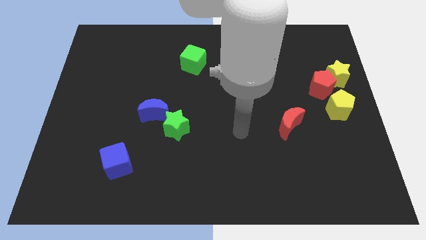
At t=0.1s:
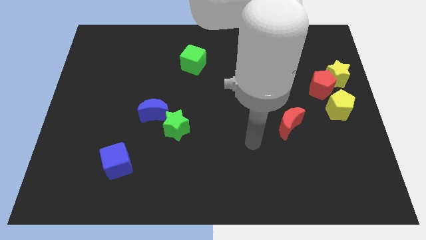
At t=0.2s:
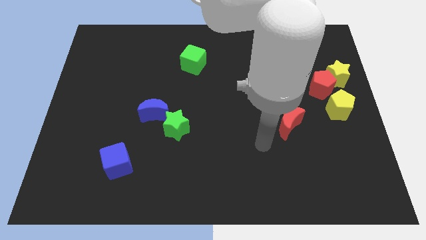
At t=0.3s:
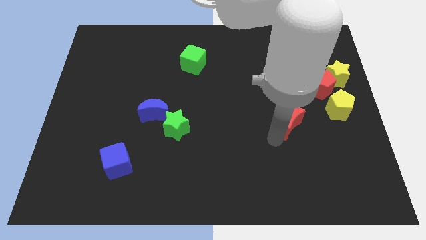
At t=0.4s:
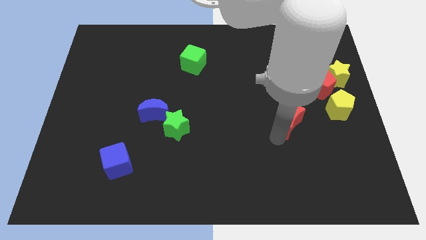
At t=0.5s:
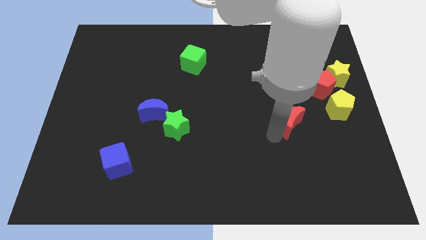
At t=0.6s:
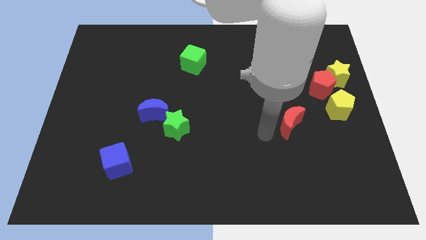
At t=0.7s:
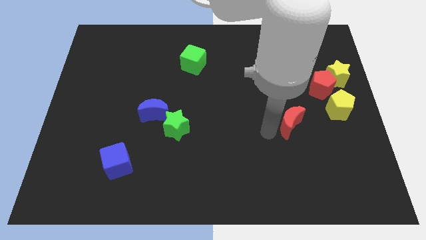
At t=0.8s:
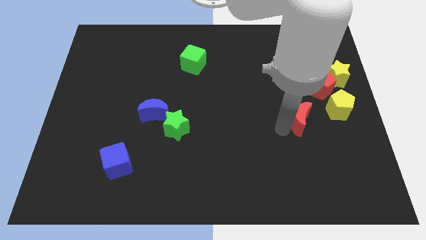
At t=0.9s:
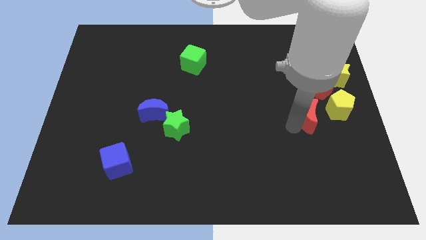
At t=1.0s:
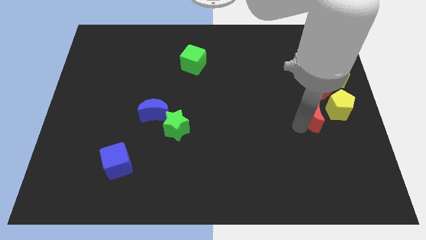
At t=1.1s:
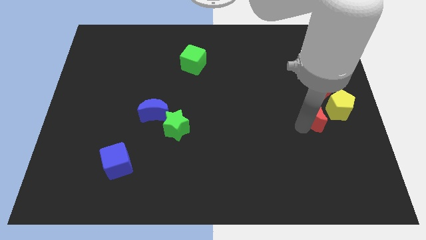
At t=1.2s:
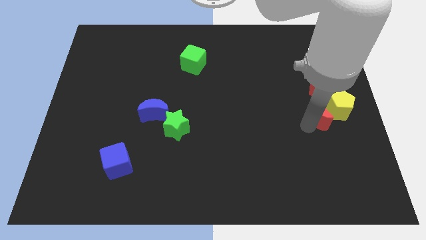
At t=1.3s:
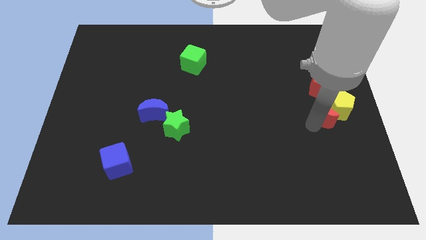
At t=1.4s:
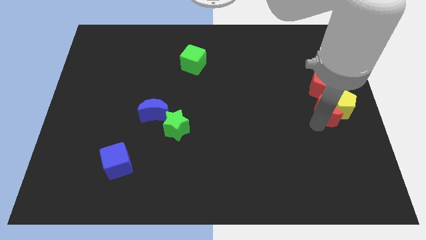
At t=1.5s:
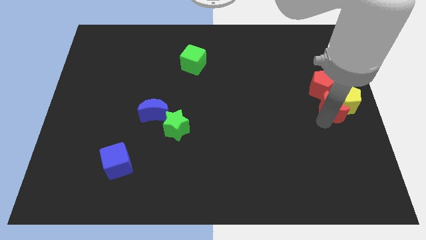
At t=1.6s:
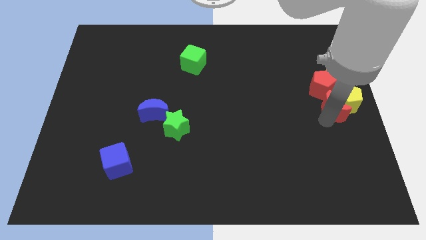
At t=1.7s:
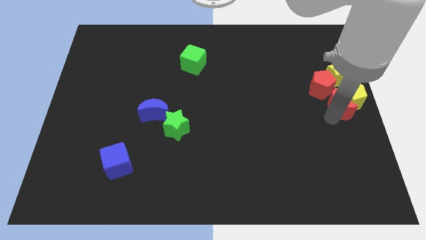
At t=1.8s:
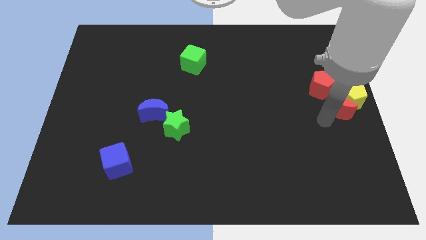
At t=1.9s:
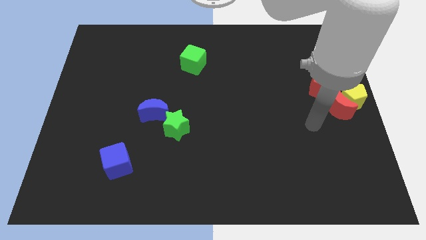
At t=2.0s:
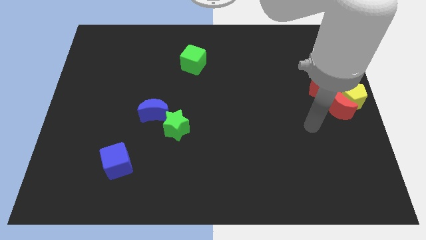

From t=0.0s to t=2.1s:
push the yellow pentagon along with the red crescent towards the center right of the board

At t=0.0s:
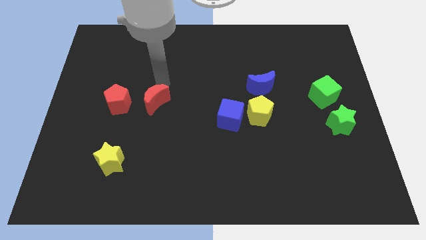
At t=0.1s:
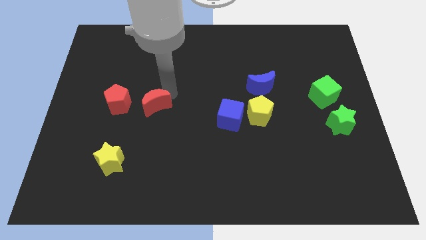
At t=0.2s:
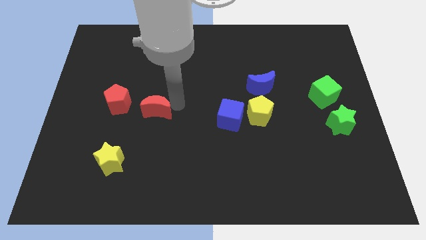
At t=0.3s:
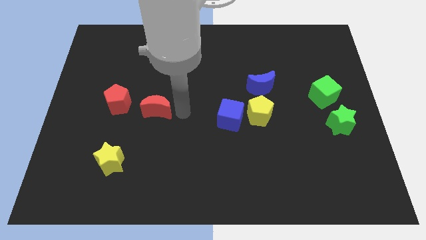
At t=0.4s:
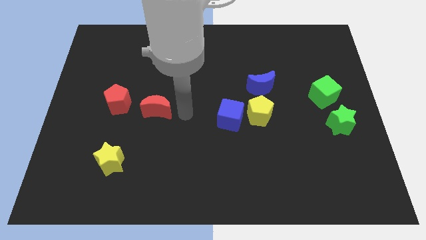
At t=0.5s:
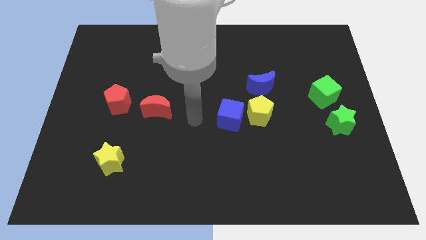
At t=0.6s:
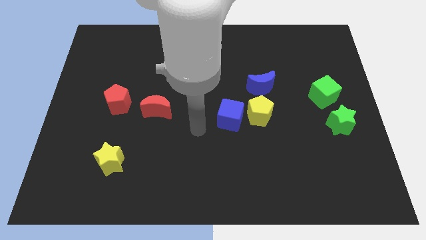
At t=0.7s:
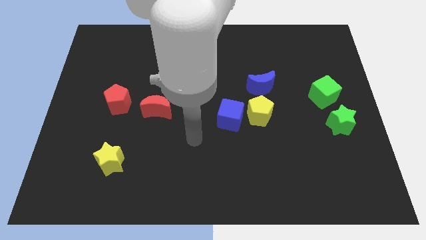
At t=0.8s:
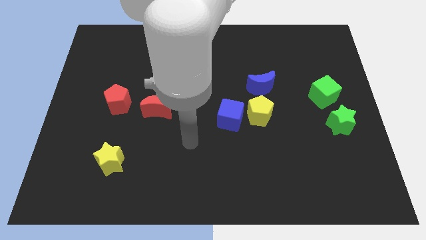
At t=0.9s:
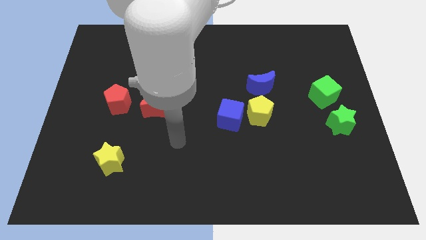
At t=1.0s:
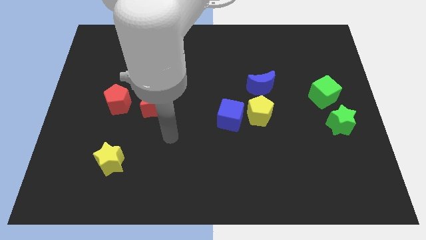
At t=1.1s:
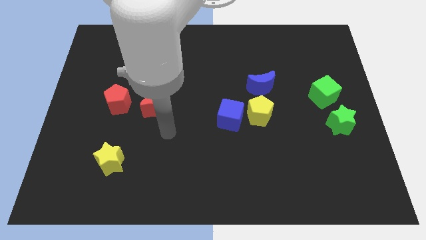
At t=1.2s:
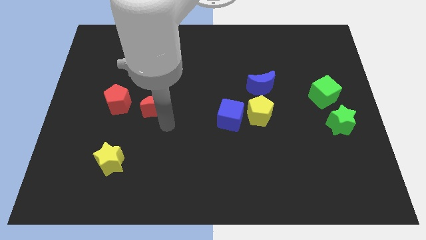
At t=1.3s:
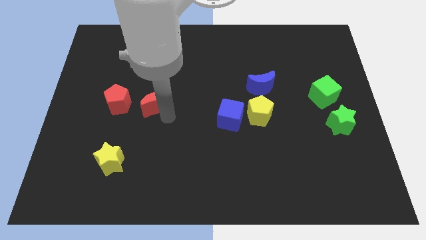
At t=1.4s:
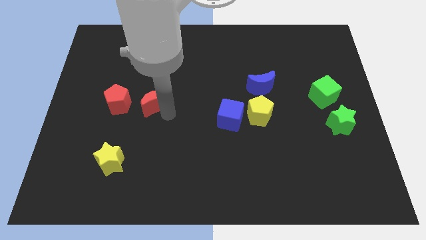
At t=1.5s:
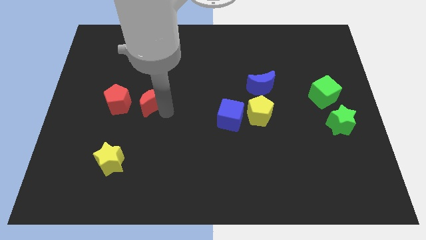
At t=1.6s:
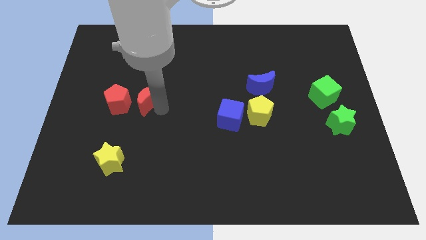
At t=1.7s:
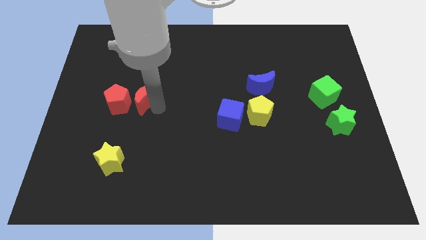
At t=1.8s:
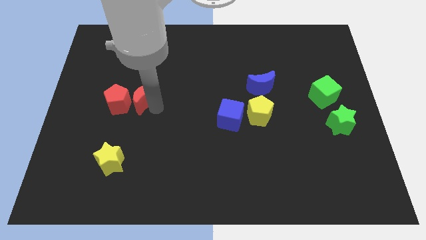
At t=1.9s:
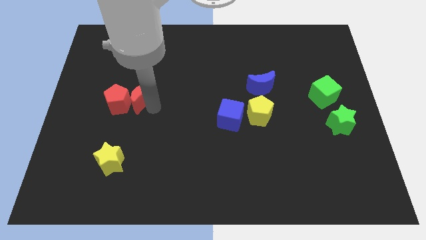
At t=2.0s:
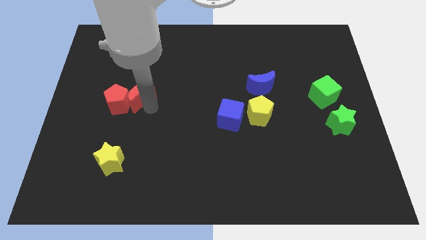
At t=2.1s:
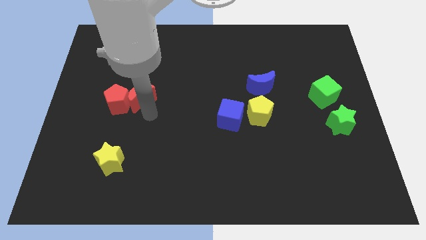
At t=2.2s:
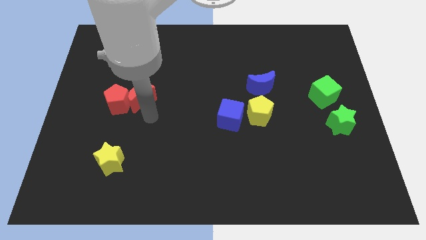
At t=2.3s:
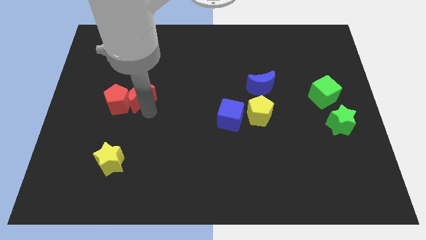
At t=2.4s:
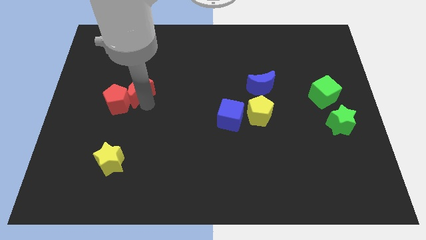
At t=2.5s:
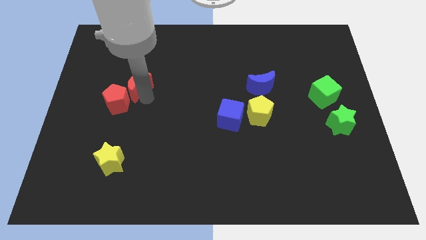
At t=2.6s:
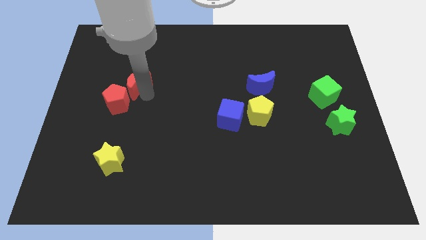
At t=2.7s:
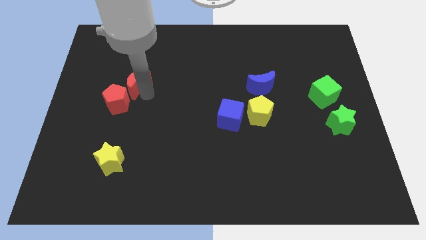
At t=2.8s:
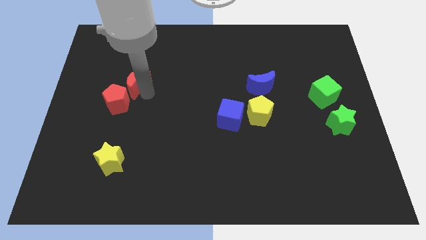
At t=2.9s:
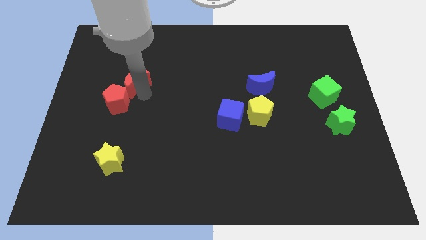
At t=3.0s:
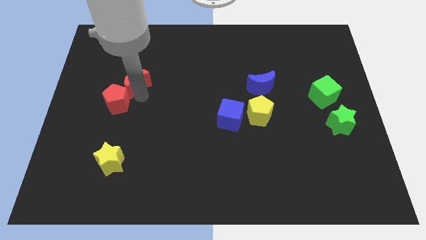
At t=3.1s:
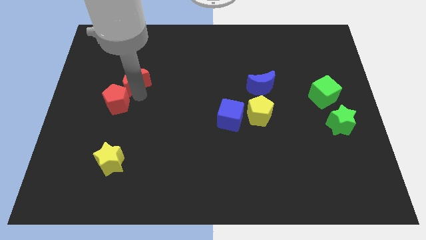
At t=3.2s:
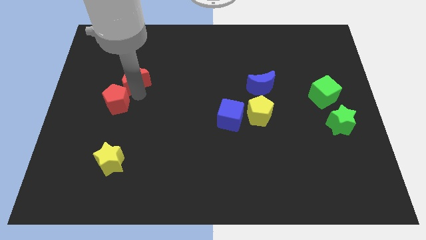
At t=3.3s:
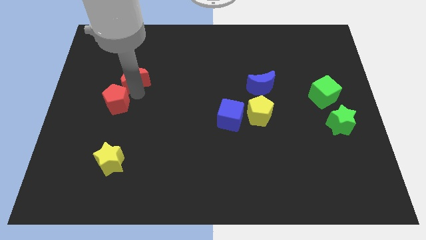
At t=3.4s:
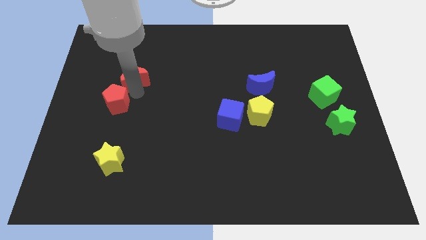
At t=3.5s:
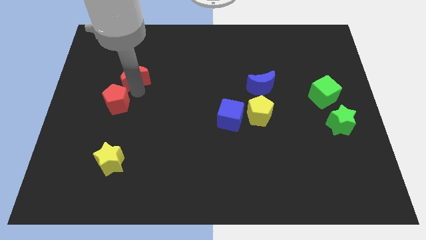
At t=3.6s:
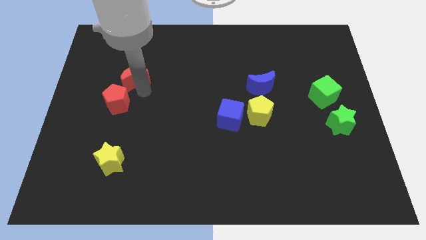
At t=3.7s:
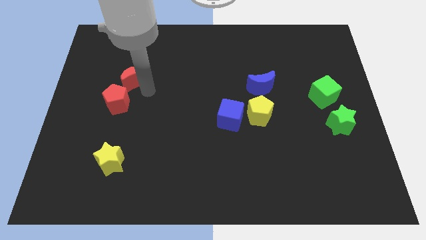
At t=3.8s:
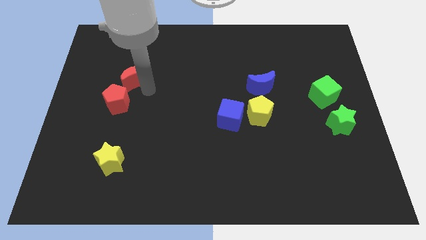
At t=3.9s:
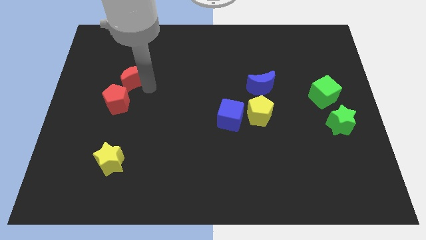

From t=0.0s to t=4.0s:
place the red moon above the red pentagon

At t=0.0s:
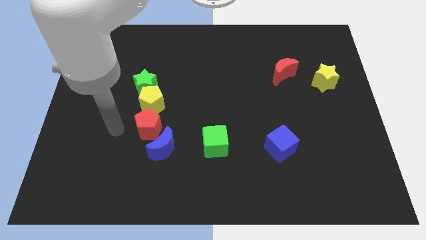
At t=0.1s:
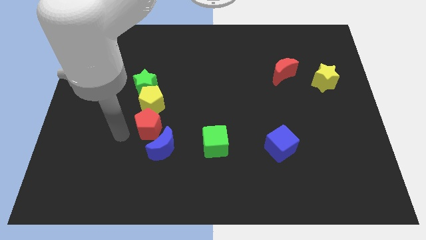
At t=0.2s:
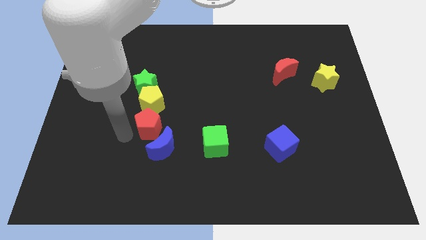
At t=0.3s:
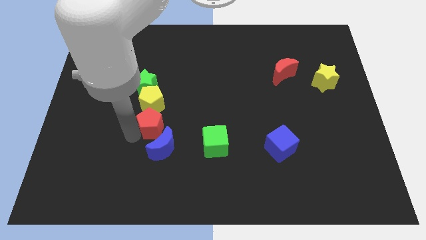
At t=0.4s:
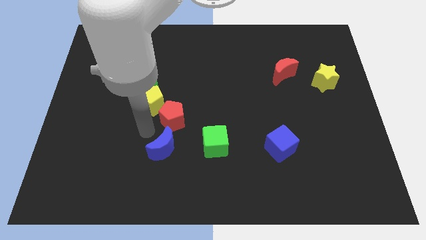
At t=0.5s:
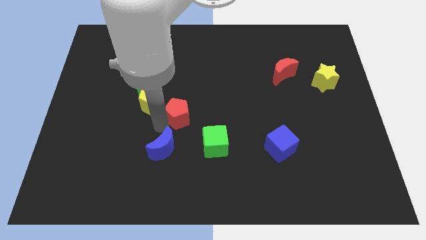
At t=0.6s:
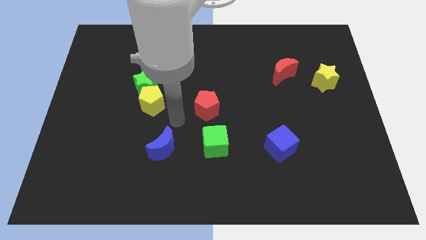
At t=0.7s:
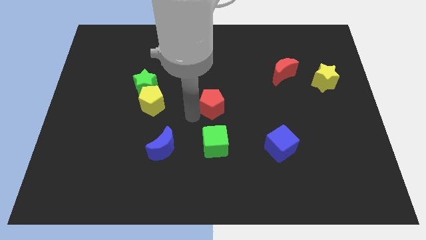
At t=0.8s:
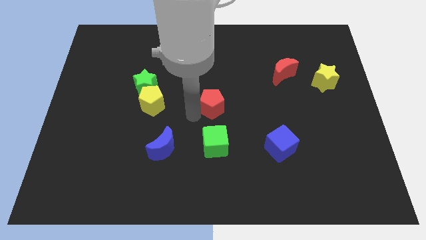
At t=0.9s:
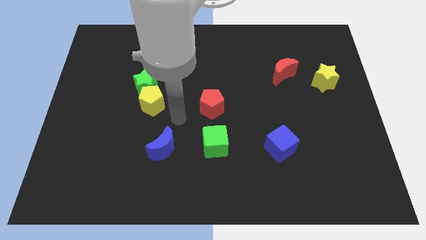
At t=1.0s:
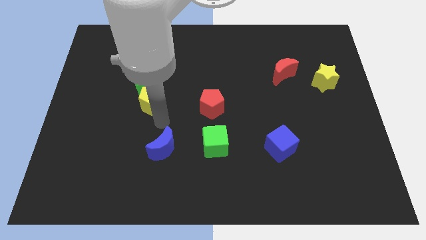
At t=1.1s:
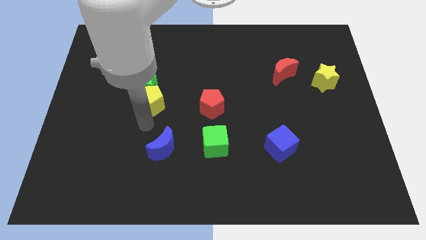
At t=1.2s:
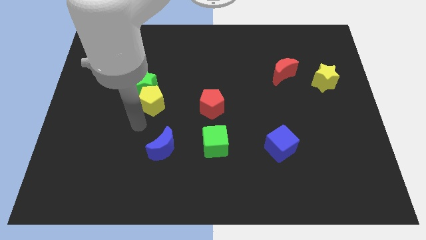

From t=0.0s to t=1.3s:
place the red pentagon vertically above the green cube

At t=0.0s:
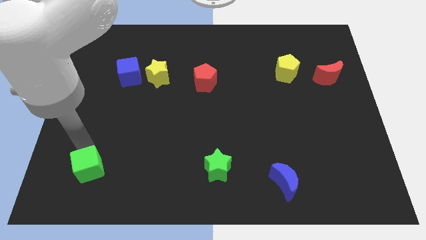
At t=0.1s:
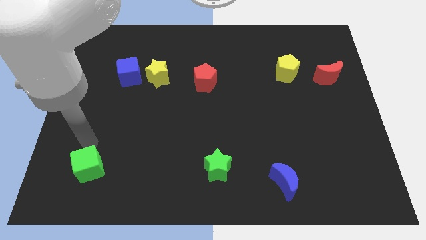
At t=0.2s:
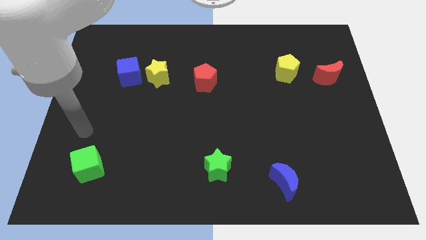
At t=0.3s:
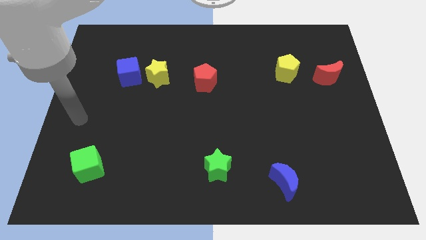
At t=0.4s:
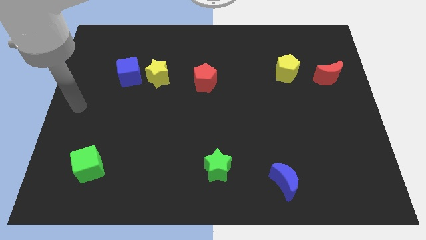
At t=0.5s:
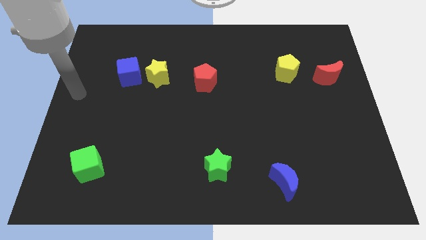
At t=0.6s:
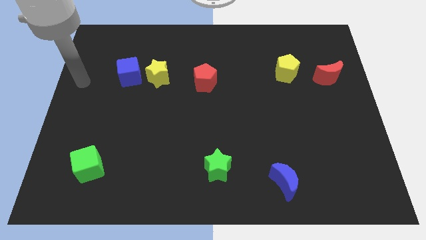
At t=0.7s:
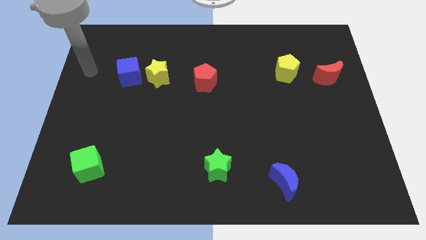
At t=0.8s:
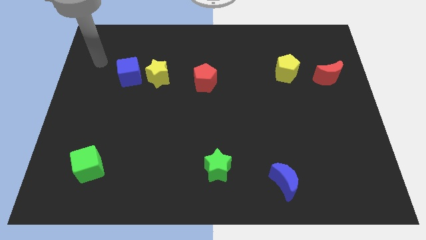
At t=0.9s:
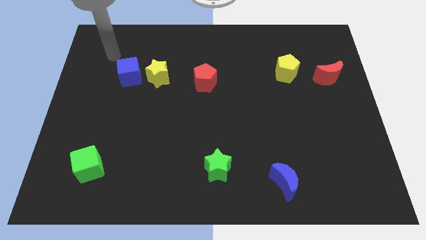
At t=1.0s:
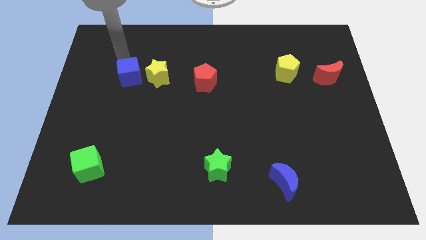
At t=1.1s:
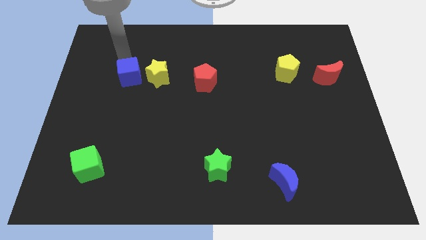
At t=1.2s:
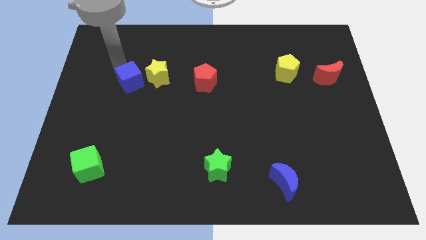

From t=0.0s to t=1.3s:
point your arm at the top of blue cube

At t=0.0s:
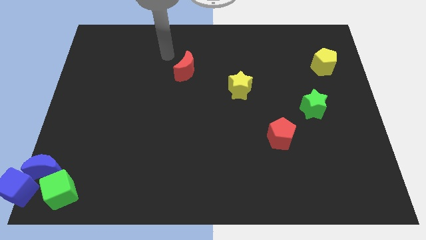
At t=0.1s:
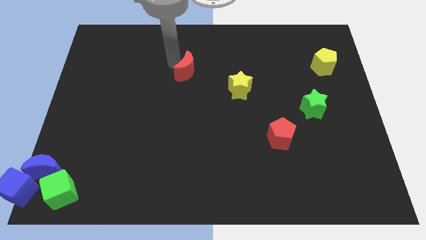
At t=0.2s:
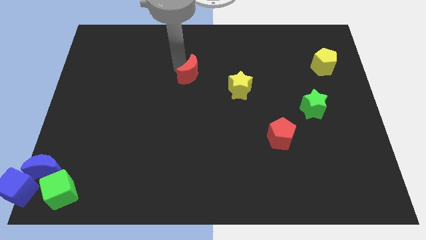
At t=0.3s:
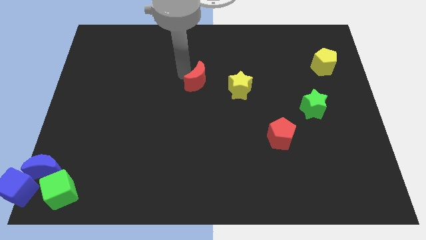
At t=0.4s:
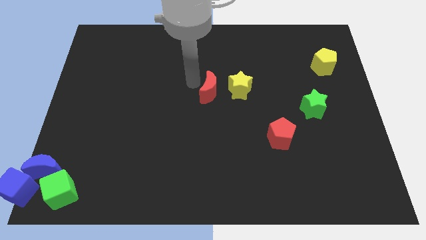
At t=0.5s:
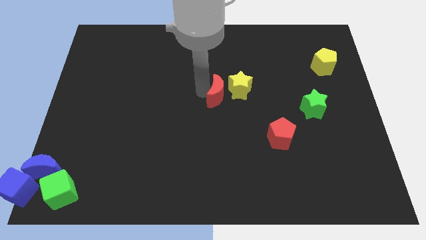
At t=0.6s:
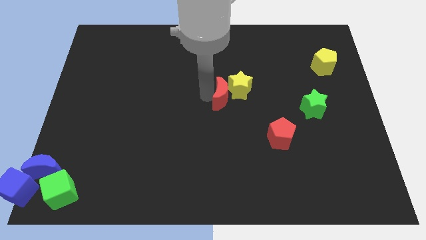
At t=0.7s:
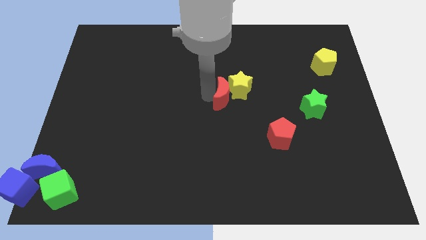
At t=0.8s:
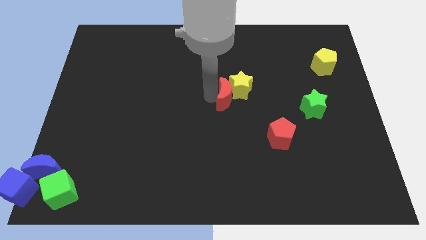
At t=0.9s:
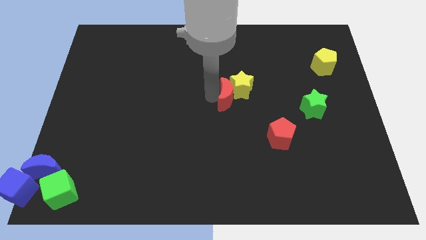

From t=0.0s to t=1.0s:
push the red moon into the yellow star
